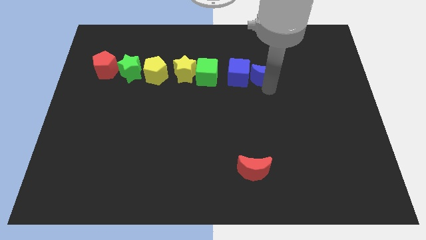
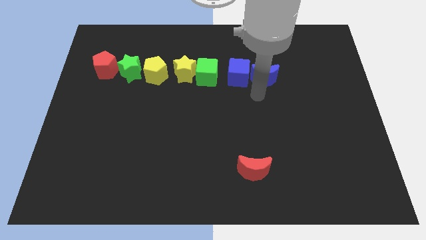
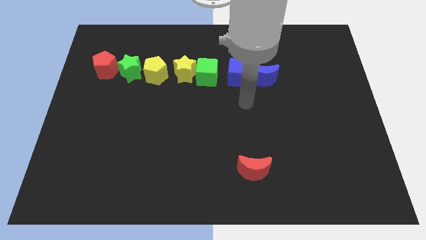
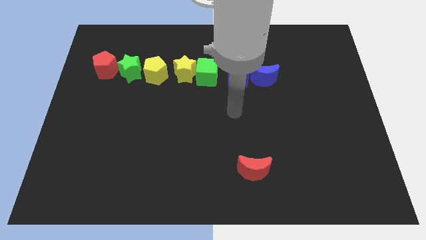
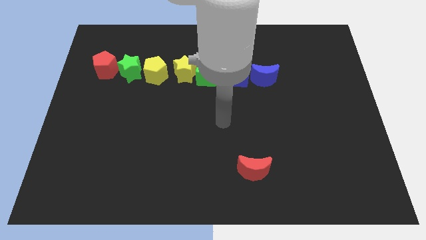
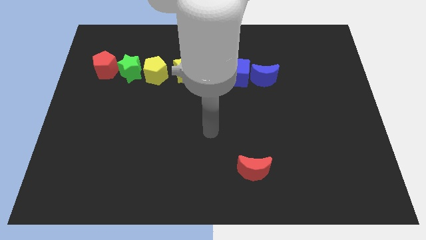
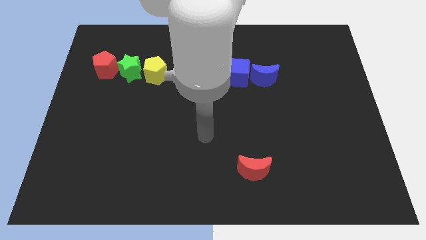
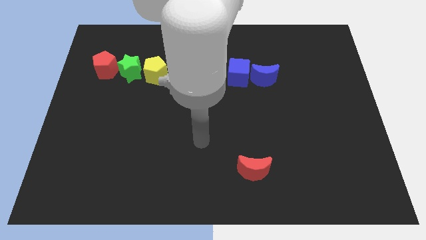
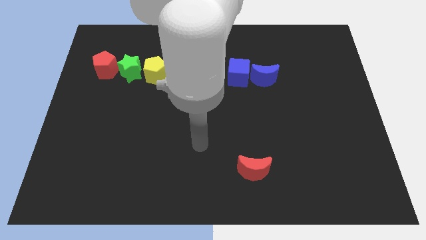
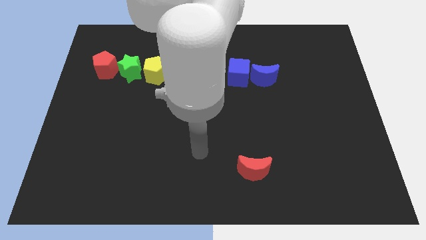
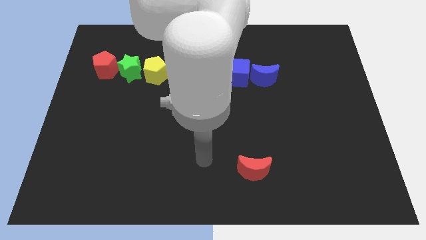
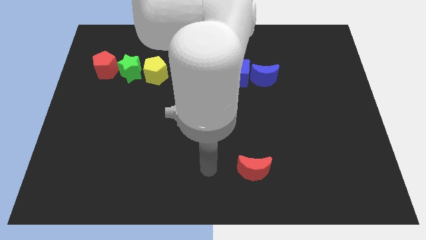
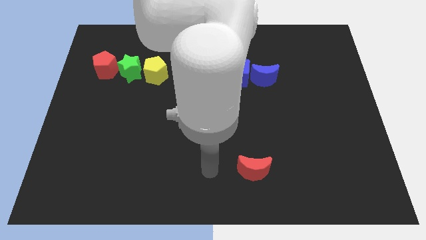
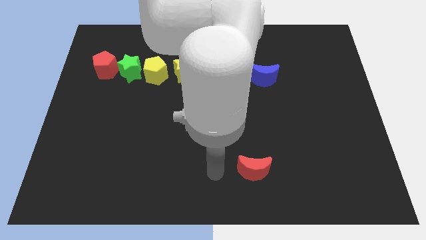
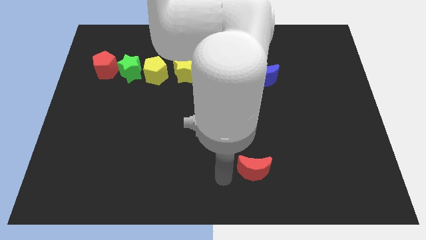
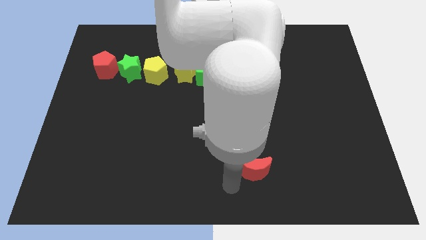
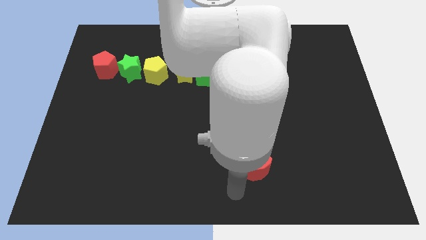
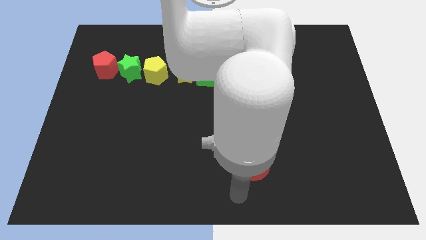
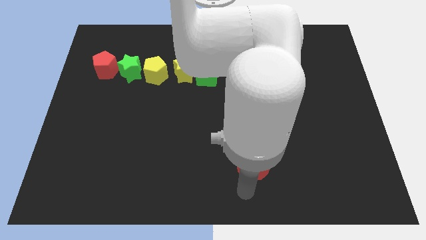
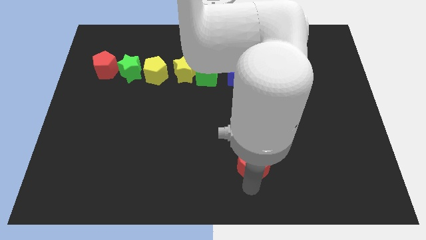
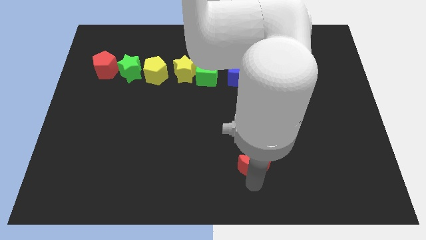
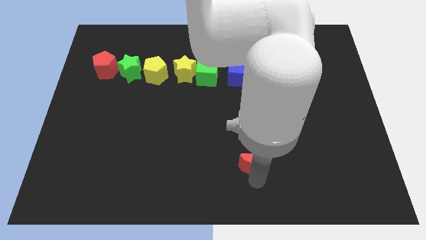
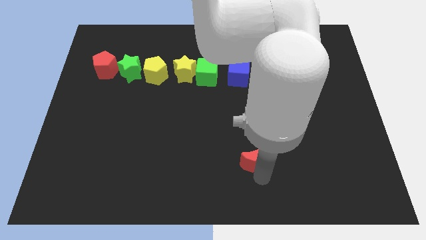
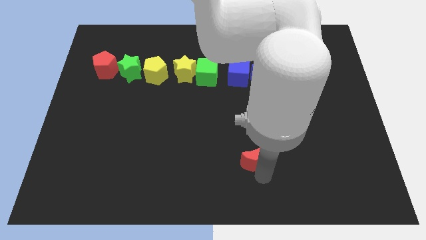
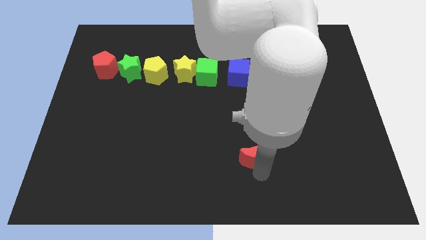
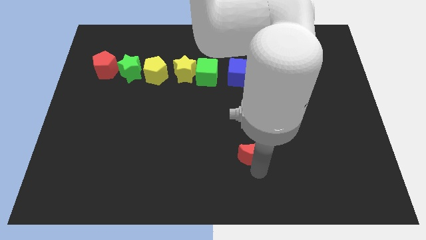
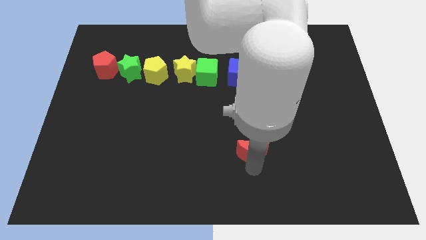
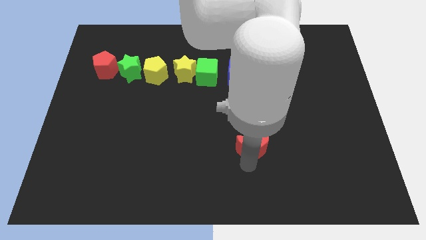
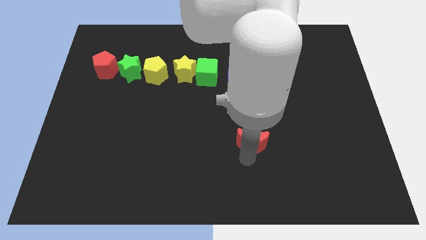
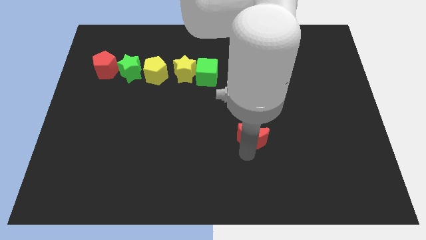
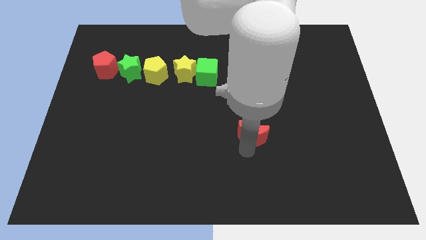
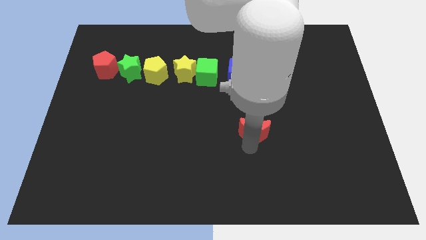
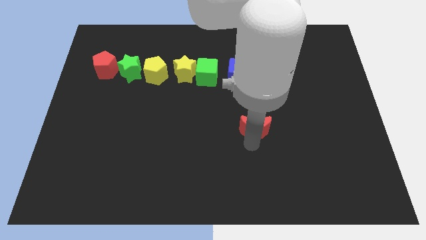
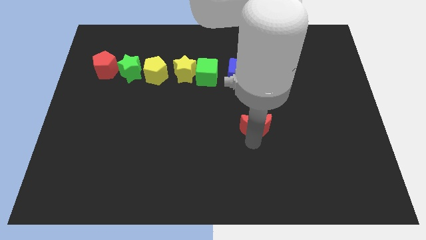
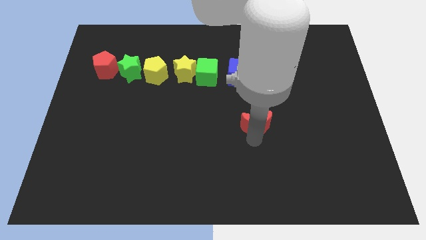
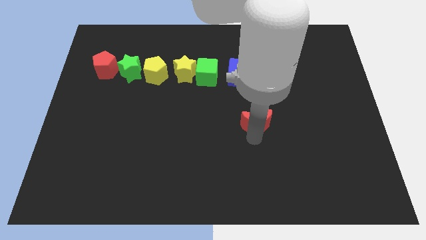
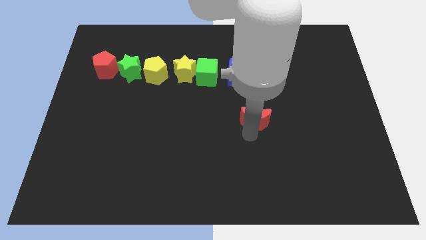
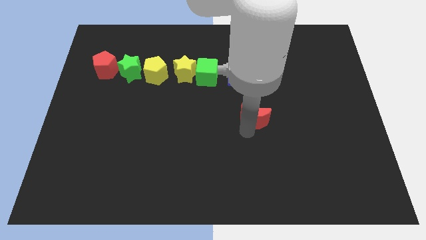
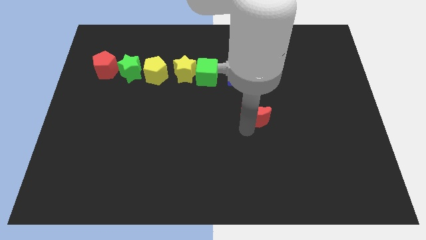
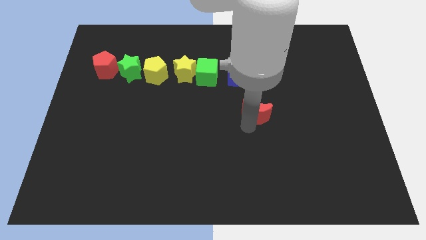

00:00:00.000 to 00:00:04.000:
push red crescent slight towards upwards

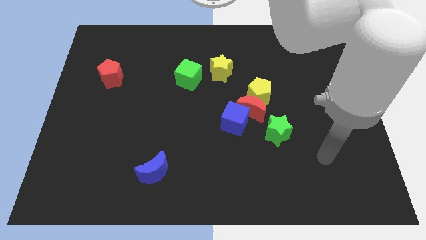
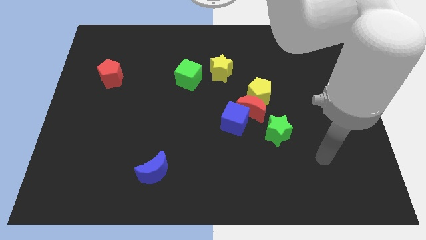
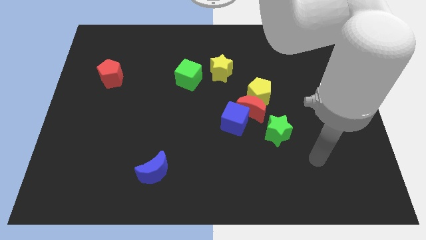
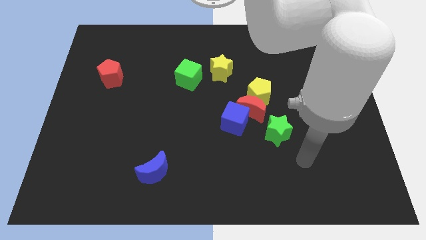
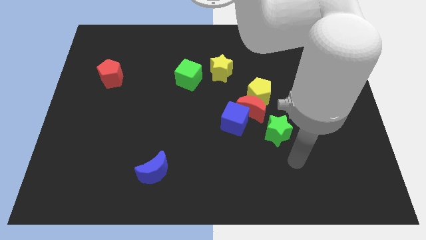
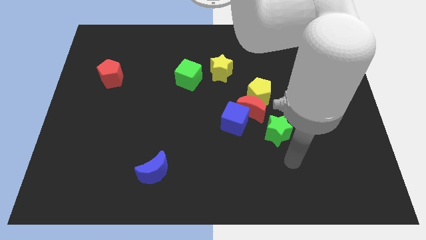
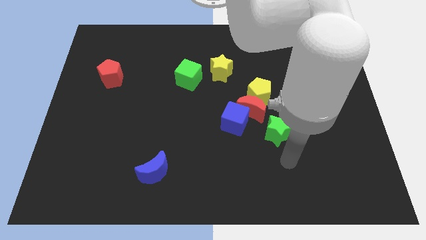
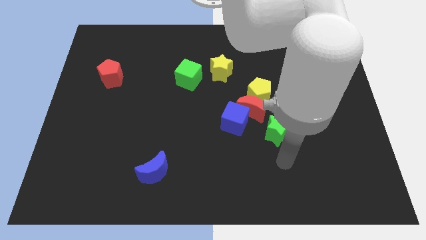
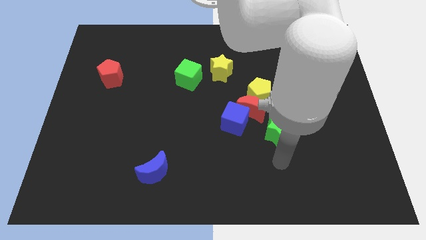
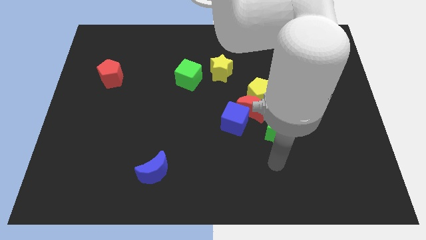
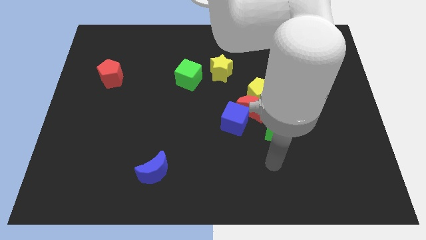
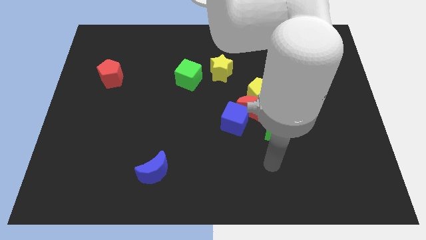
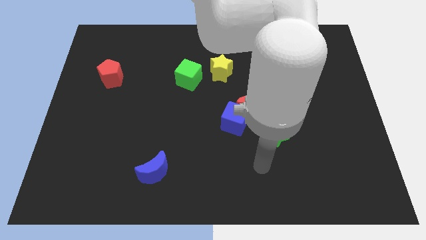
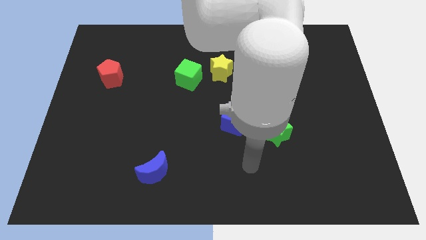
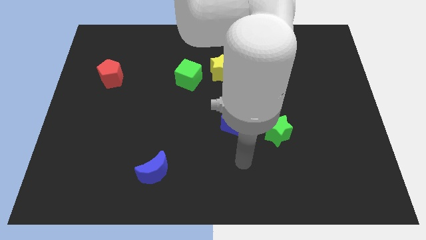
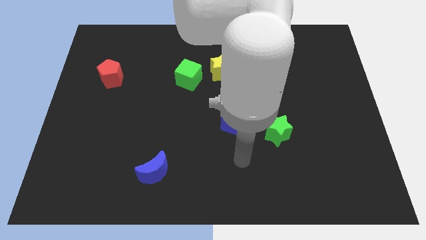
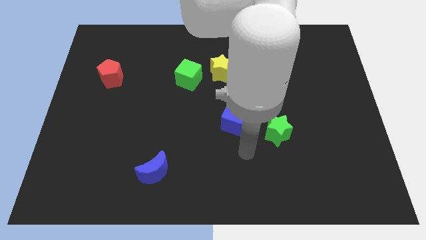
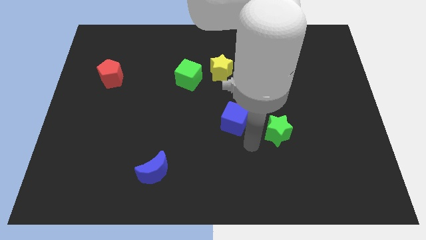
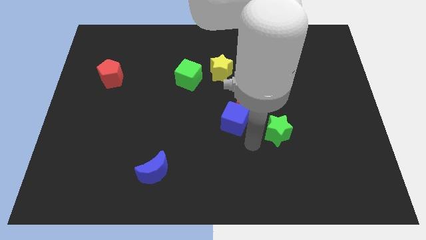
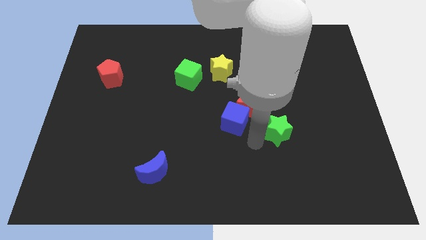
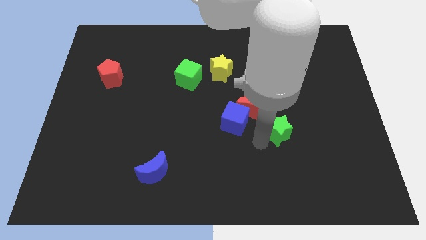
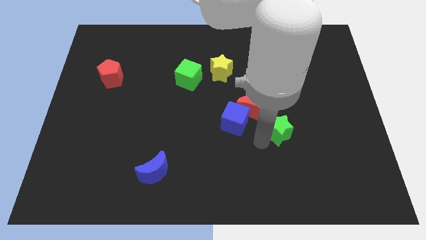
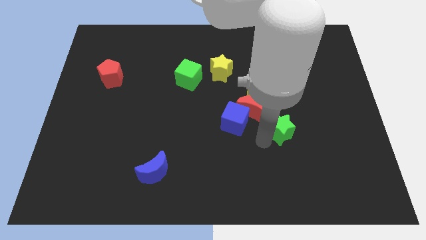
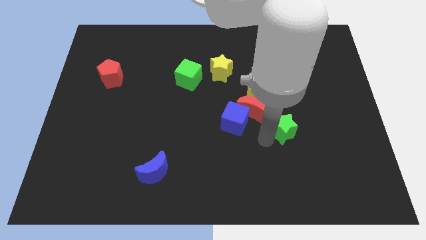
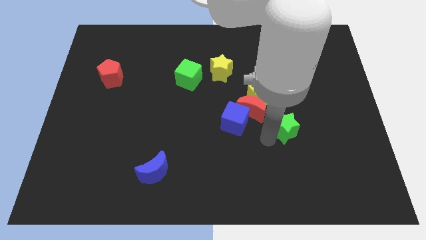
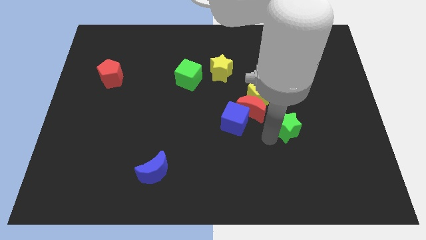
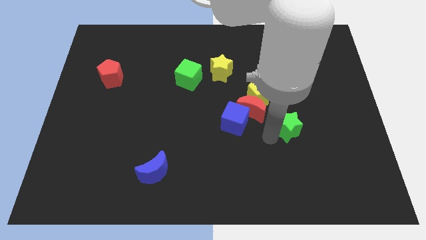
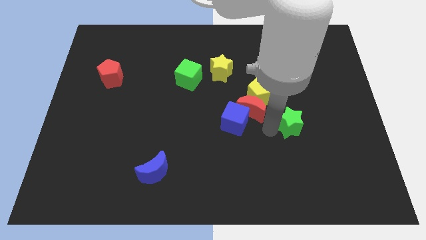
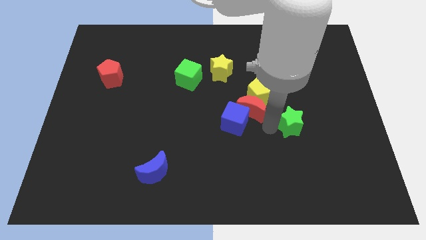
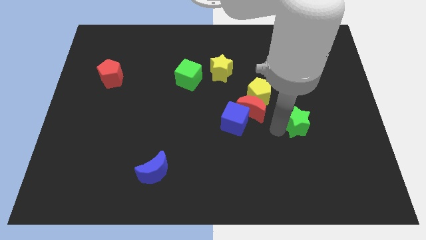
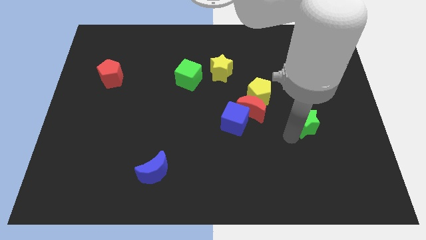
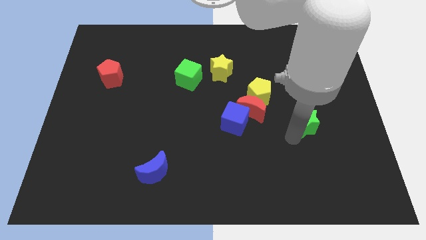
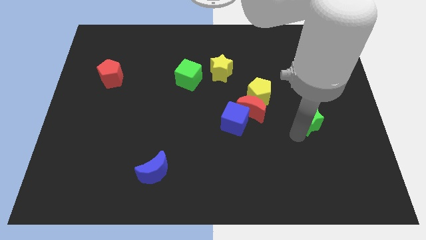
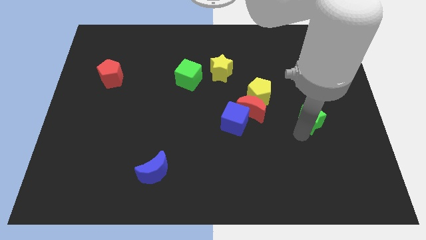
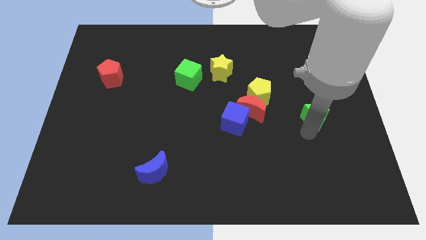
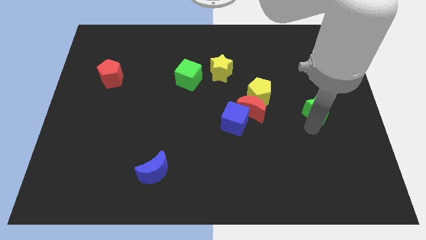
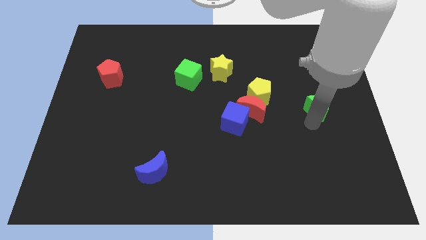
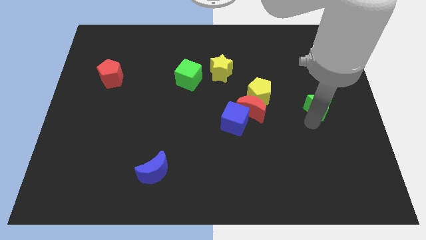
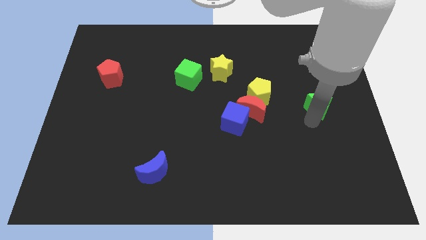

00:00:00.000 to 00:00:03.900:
push the green star to the right side of the yellow pentagon and red moon

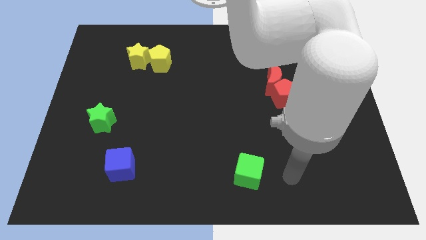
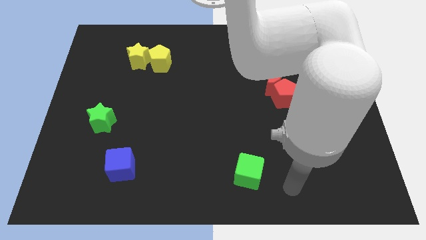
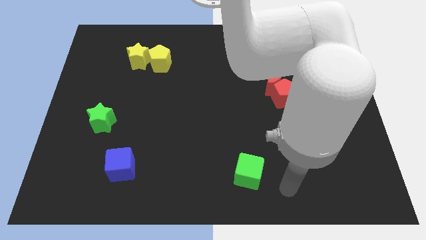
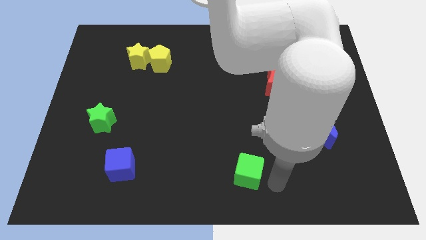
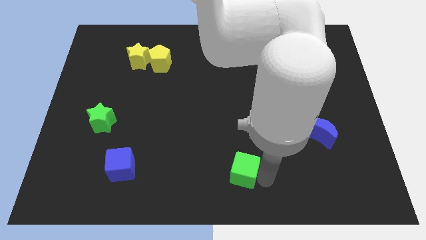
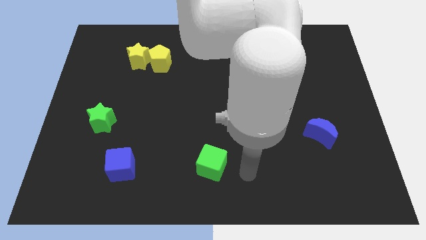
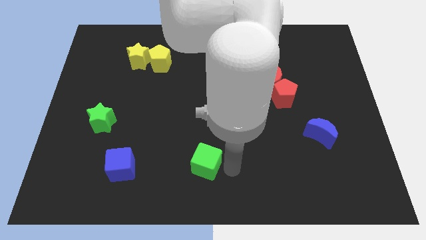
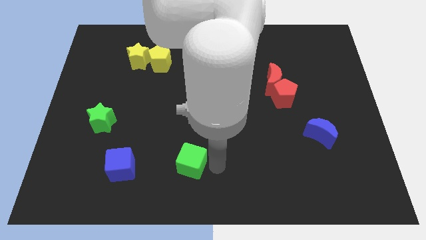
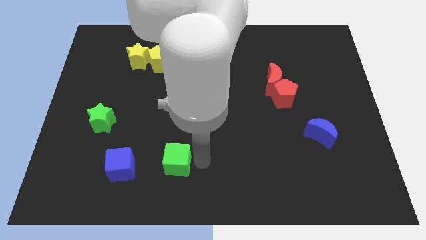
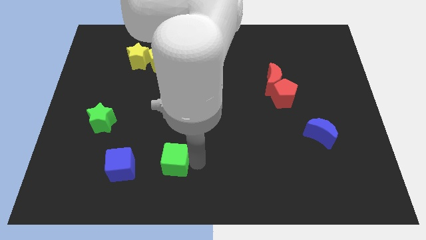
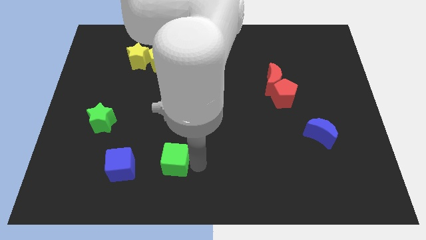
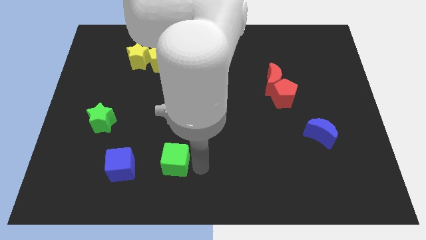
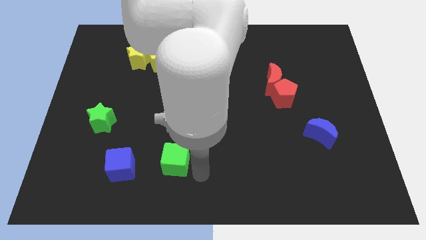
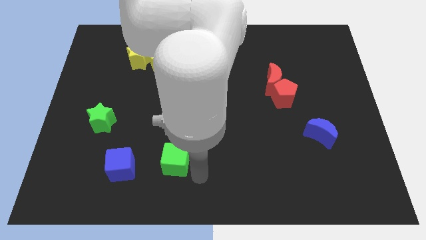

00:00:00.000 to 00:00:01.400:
move the green cube to the right of the blue cube
